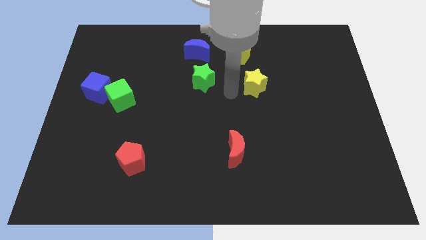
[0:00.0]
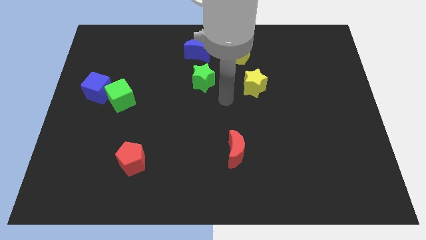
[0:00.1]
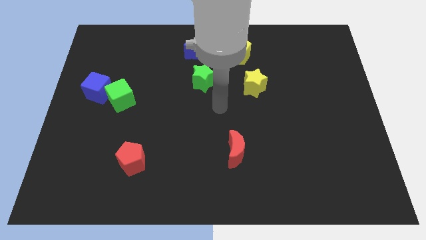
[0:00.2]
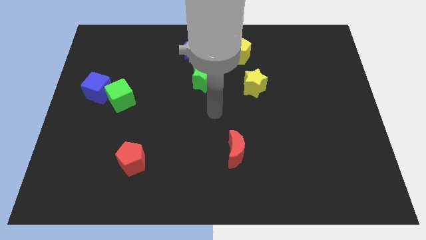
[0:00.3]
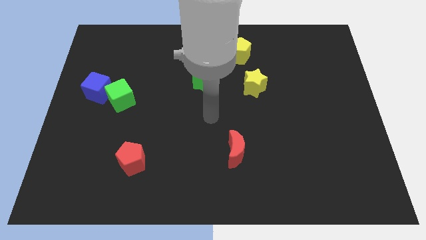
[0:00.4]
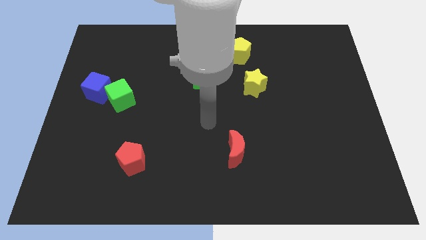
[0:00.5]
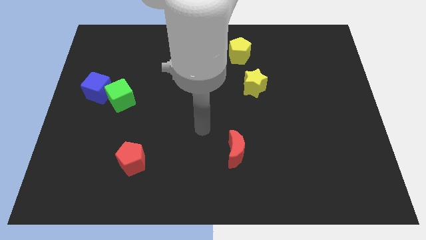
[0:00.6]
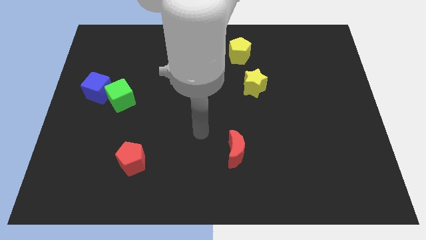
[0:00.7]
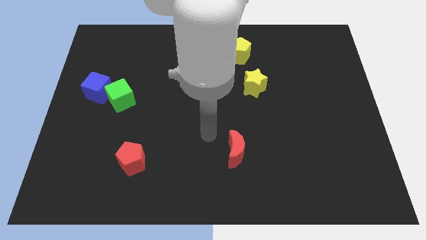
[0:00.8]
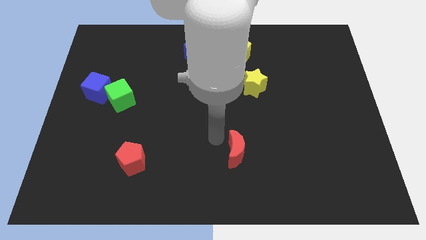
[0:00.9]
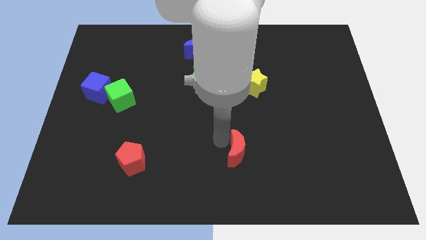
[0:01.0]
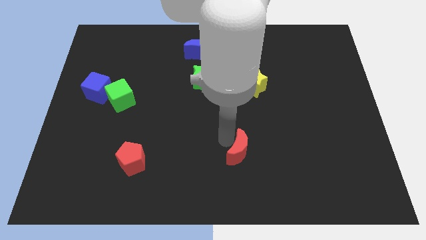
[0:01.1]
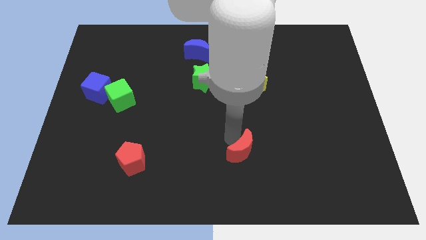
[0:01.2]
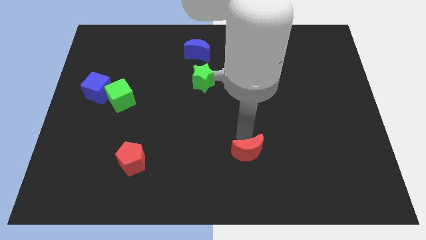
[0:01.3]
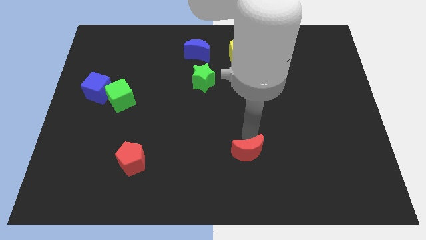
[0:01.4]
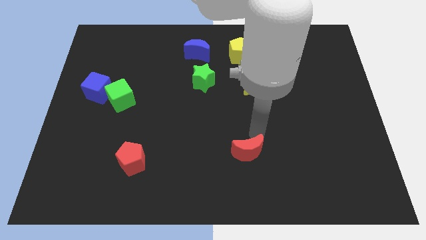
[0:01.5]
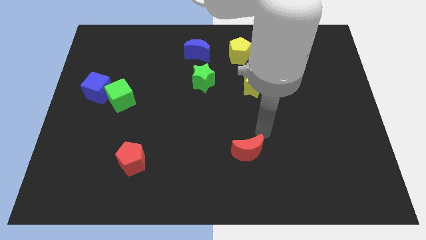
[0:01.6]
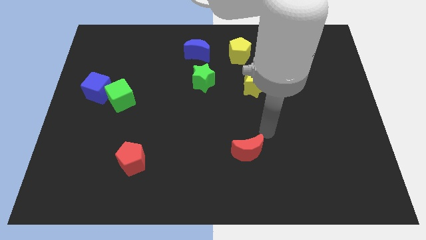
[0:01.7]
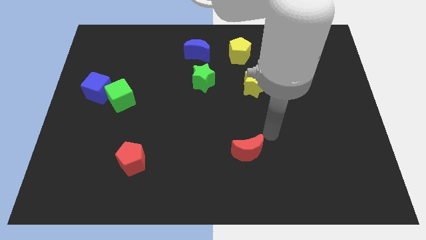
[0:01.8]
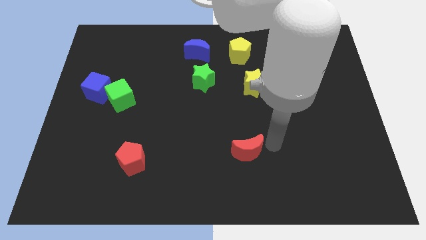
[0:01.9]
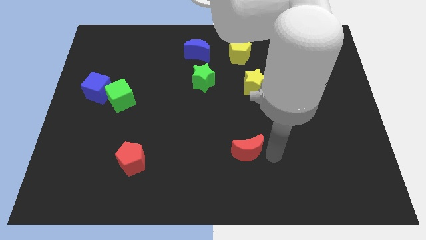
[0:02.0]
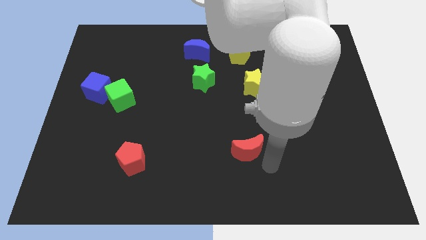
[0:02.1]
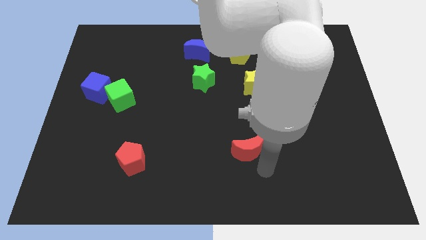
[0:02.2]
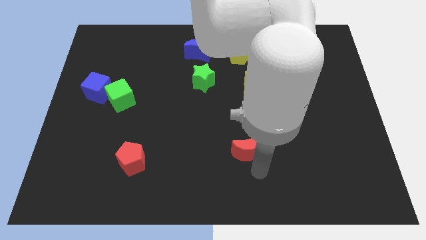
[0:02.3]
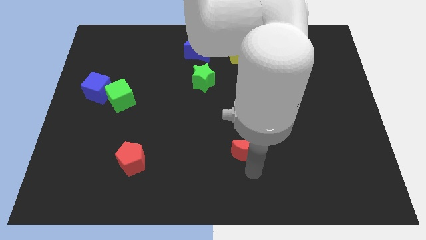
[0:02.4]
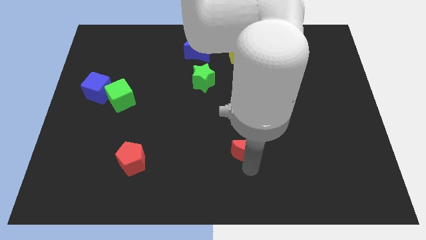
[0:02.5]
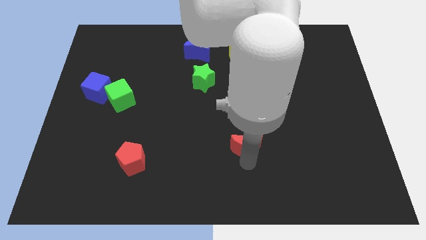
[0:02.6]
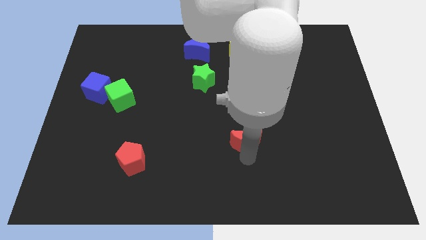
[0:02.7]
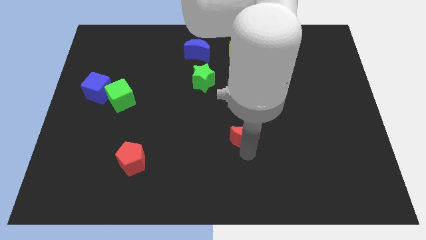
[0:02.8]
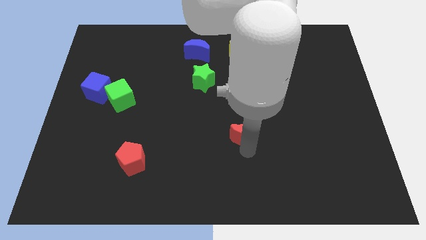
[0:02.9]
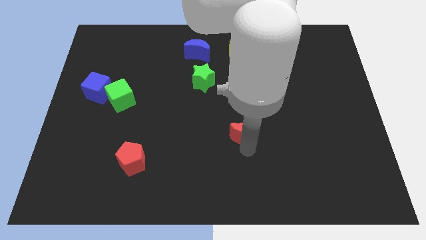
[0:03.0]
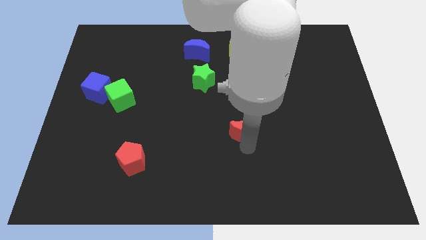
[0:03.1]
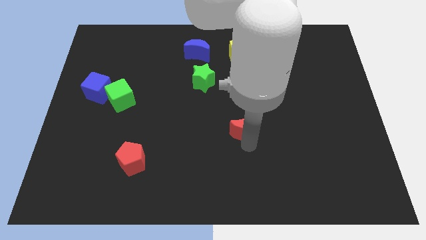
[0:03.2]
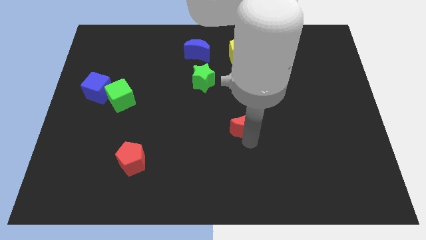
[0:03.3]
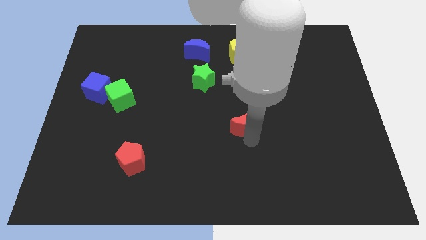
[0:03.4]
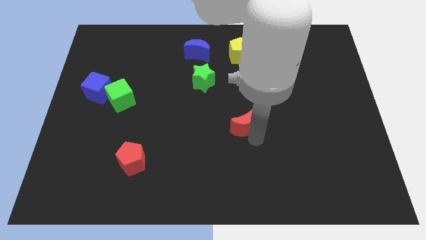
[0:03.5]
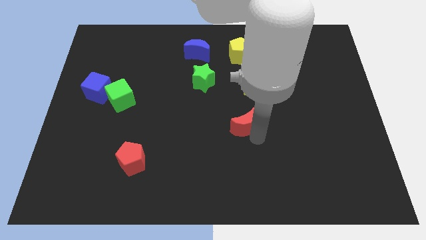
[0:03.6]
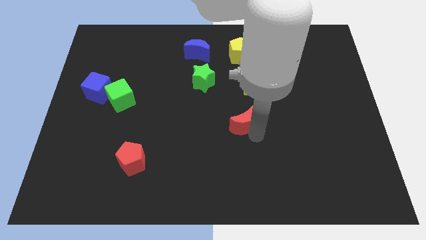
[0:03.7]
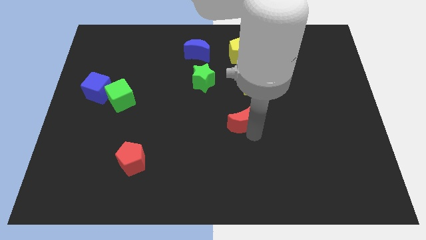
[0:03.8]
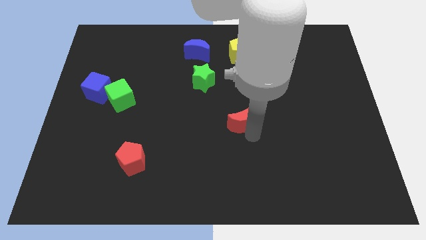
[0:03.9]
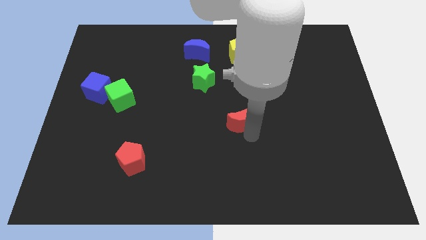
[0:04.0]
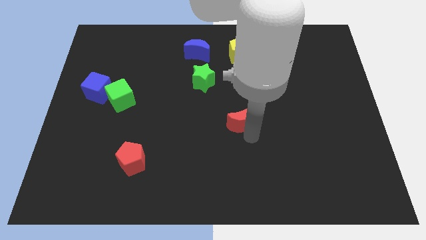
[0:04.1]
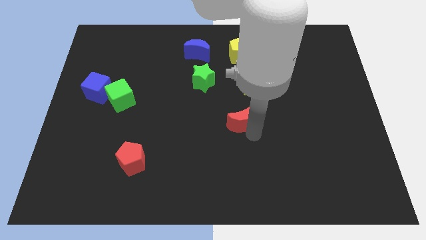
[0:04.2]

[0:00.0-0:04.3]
move the red crescent to the top of the board

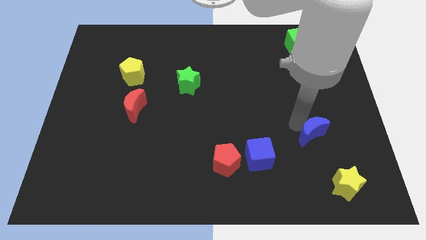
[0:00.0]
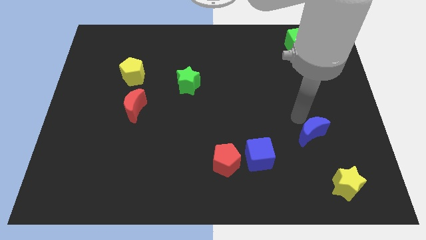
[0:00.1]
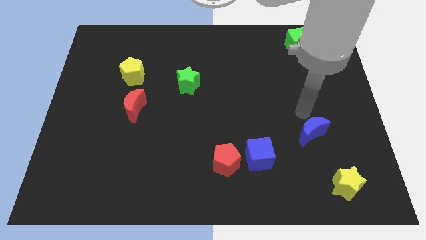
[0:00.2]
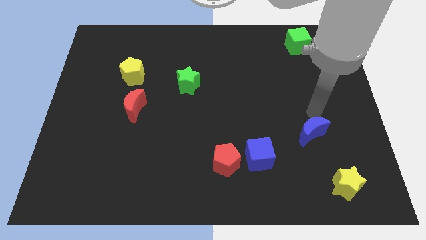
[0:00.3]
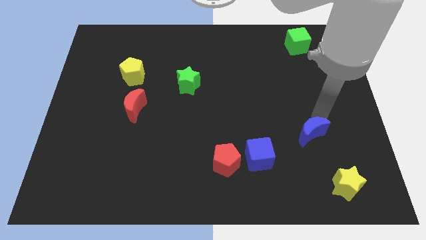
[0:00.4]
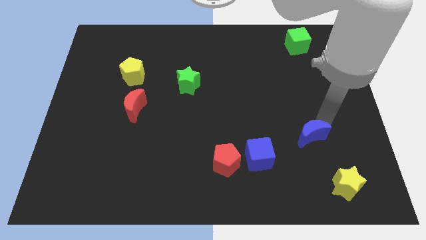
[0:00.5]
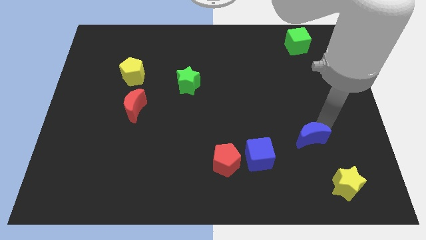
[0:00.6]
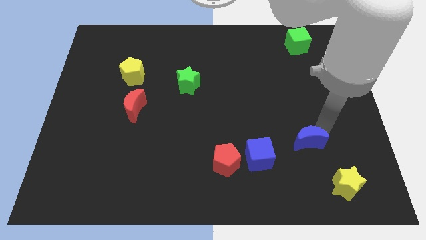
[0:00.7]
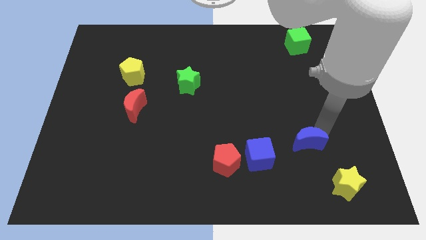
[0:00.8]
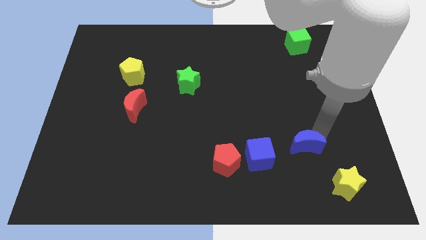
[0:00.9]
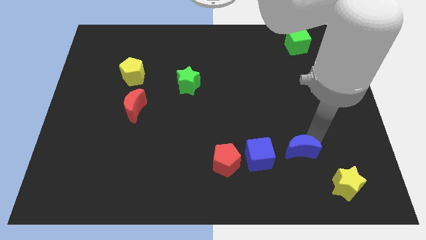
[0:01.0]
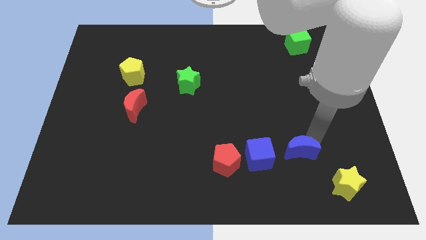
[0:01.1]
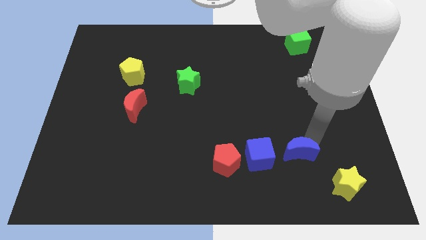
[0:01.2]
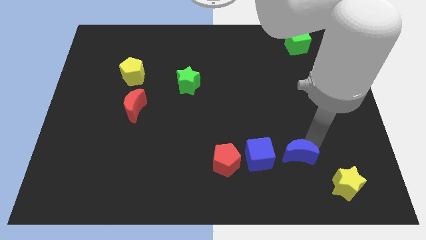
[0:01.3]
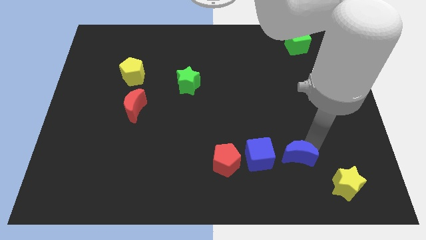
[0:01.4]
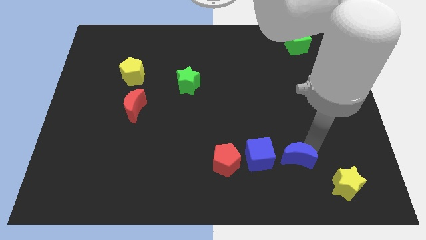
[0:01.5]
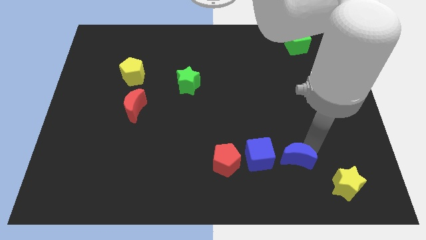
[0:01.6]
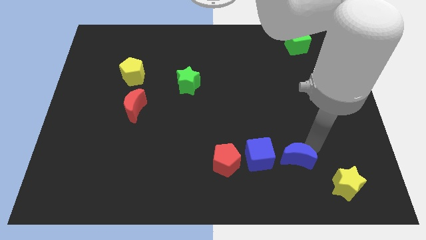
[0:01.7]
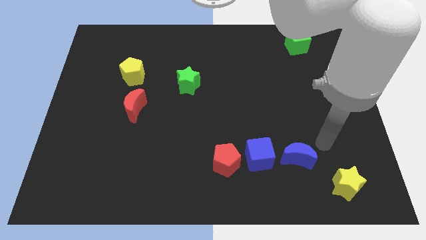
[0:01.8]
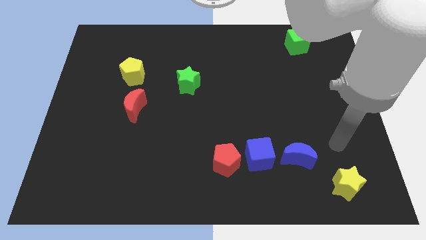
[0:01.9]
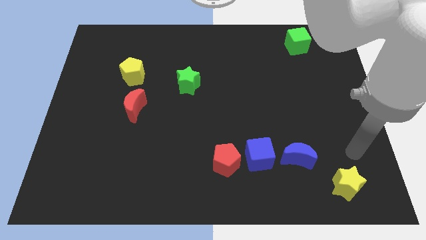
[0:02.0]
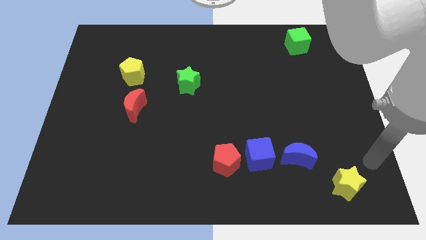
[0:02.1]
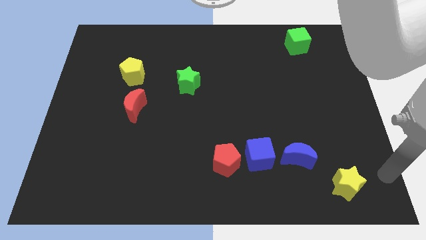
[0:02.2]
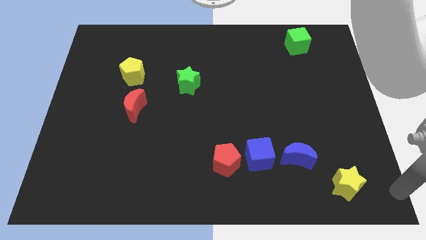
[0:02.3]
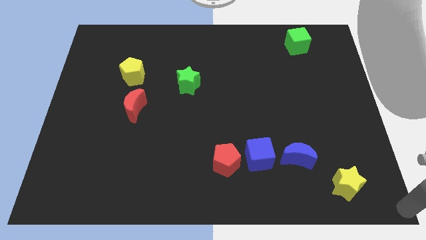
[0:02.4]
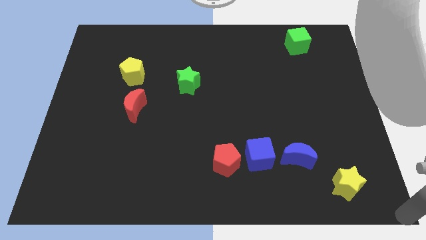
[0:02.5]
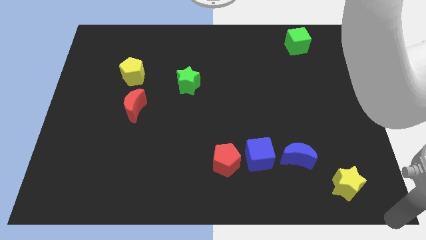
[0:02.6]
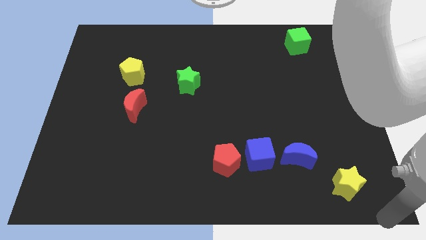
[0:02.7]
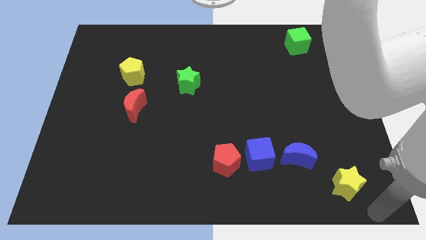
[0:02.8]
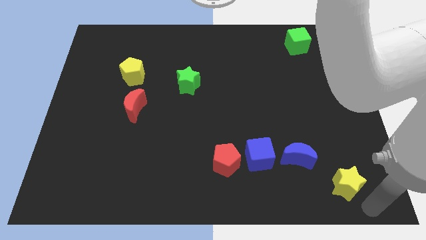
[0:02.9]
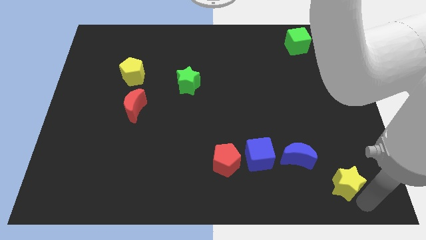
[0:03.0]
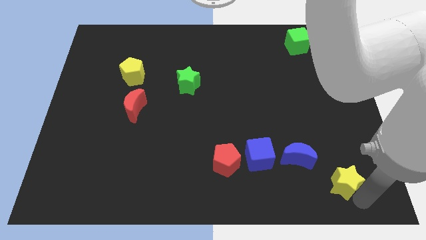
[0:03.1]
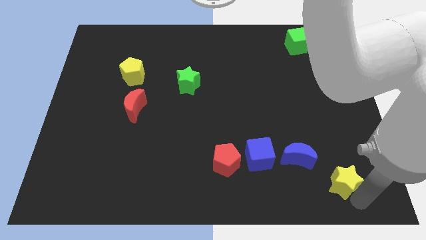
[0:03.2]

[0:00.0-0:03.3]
push the blue moon to the right side of the blue cube

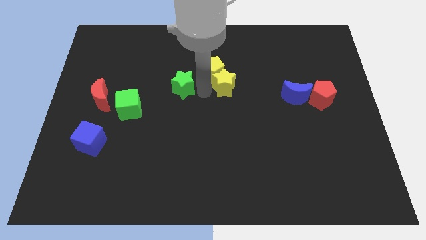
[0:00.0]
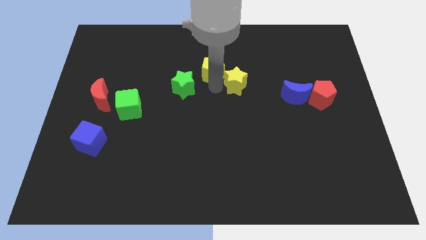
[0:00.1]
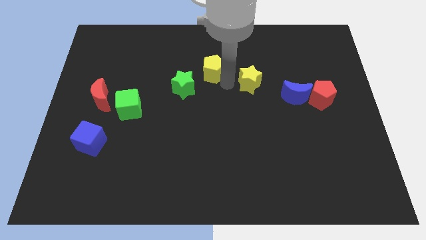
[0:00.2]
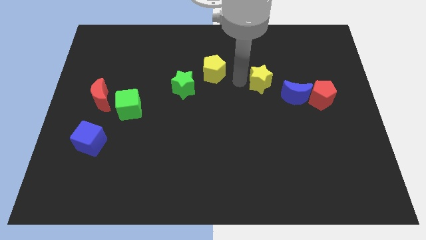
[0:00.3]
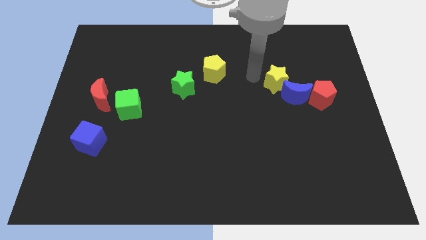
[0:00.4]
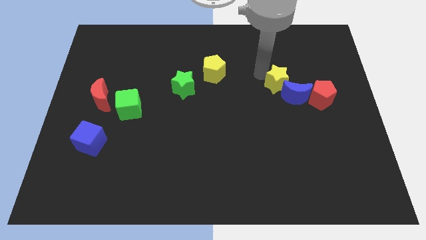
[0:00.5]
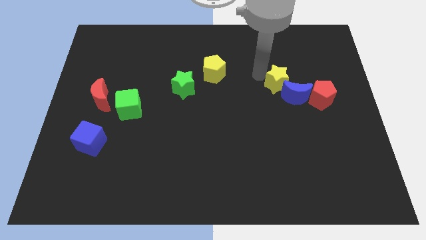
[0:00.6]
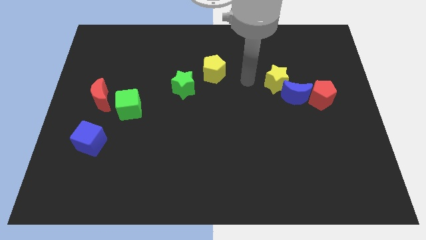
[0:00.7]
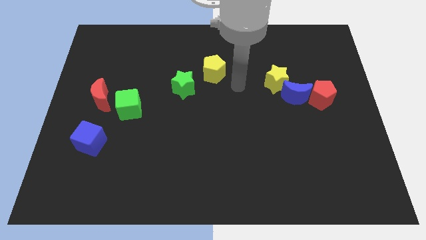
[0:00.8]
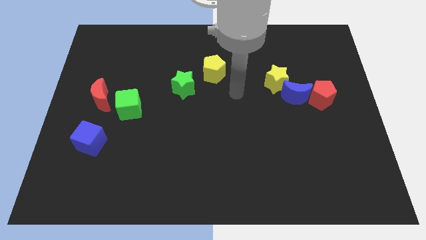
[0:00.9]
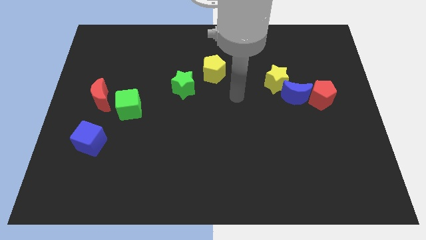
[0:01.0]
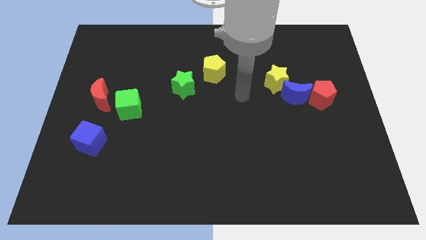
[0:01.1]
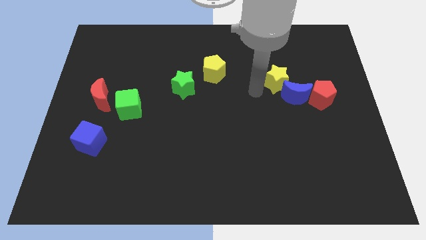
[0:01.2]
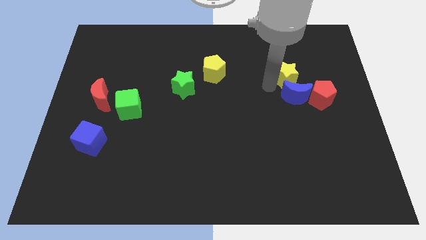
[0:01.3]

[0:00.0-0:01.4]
separate the yellow star from yellow pentagon
